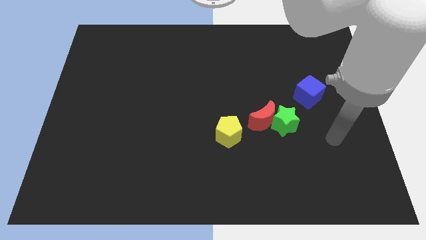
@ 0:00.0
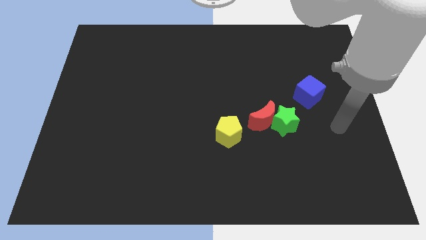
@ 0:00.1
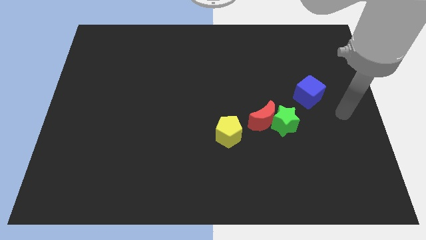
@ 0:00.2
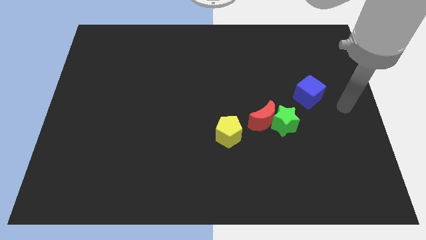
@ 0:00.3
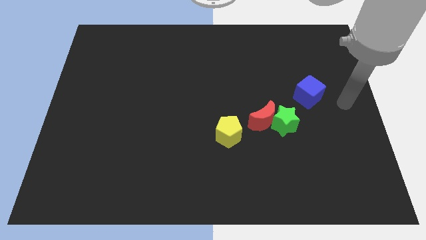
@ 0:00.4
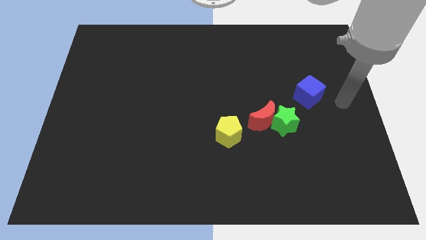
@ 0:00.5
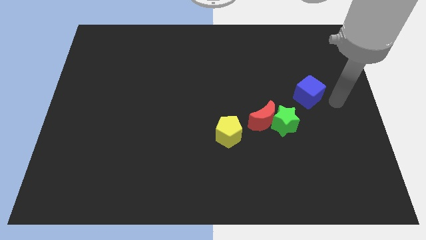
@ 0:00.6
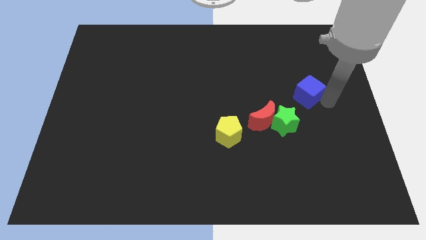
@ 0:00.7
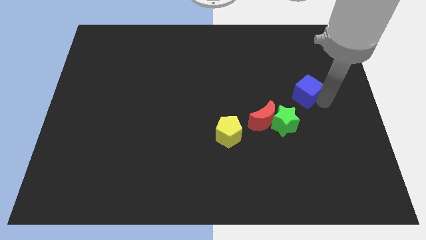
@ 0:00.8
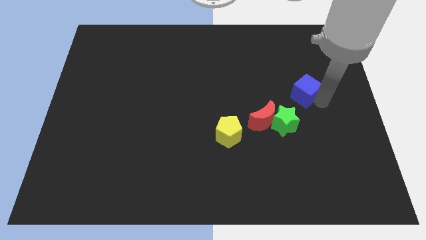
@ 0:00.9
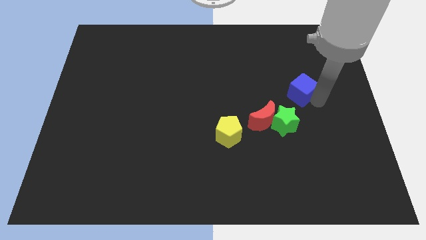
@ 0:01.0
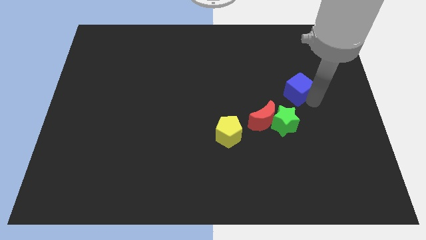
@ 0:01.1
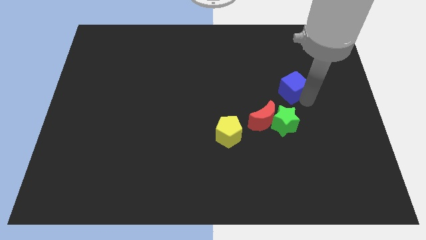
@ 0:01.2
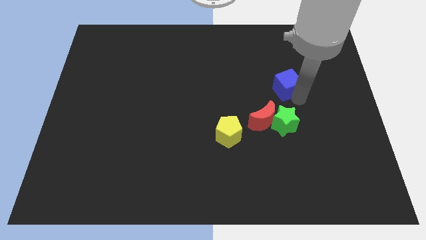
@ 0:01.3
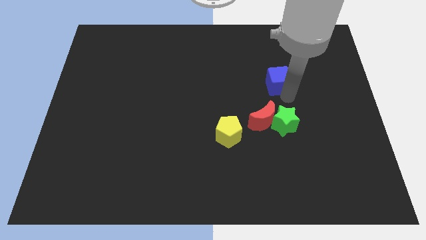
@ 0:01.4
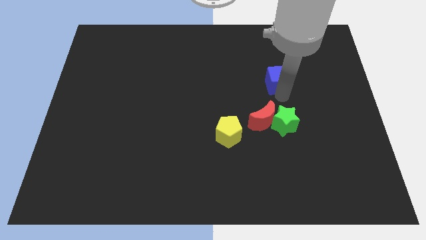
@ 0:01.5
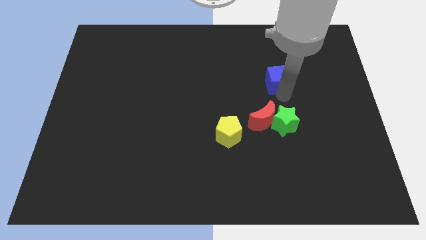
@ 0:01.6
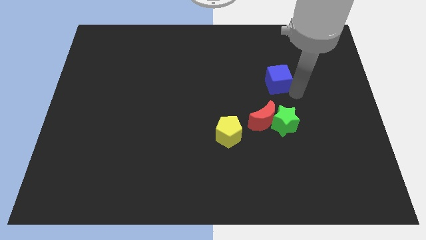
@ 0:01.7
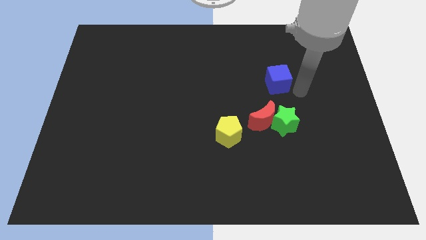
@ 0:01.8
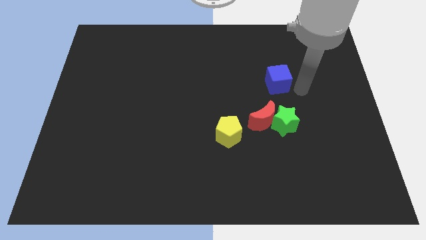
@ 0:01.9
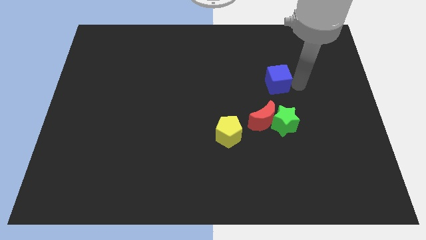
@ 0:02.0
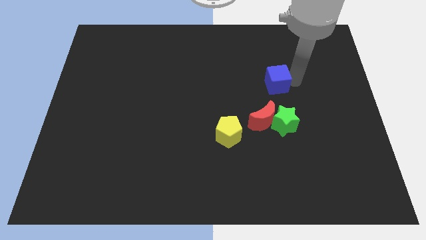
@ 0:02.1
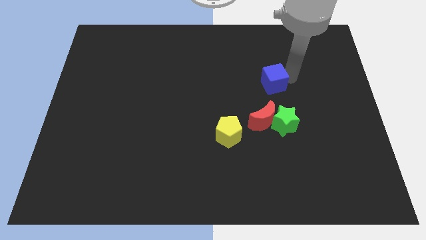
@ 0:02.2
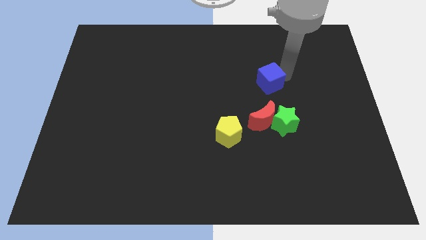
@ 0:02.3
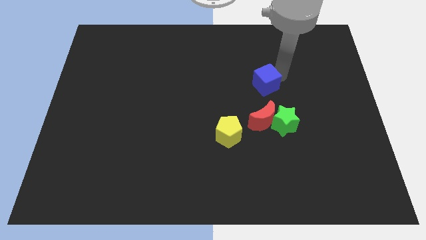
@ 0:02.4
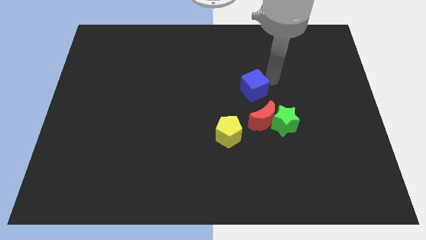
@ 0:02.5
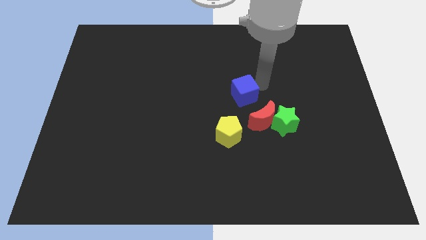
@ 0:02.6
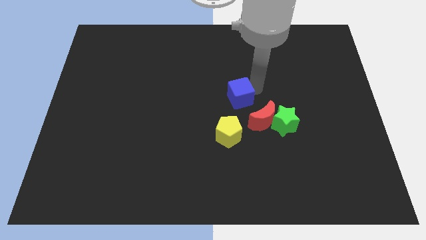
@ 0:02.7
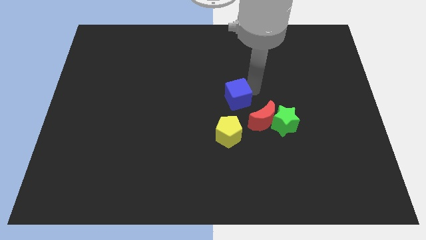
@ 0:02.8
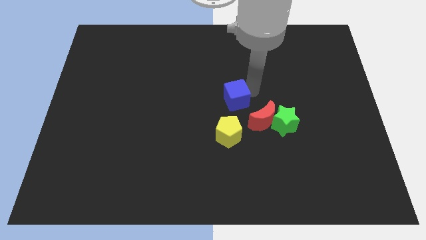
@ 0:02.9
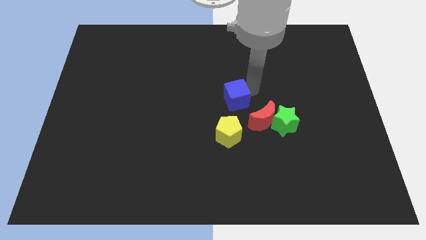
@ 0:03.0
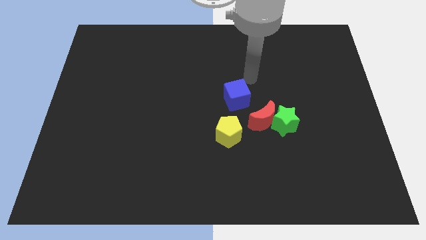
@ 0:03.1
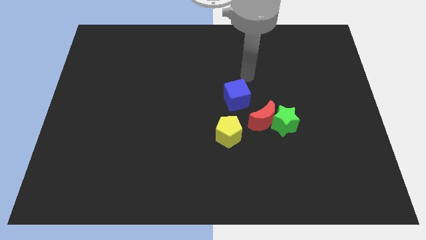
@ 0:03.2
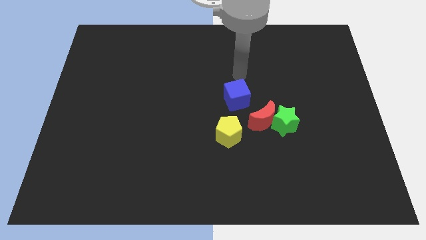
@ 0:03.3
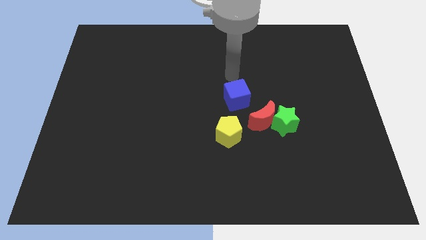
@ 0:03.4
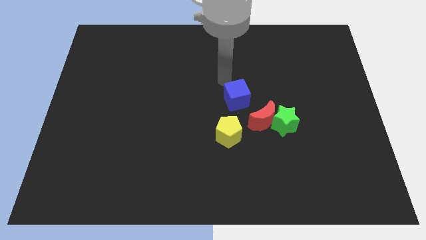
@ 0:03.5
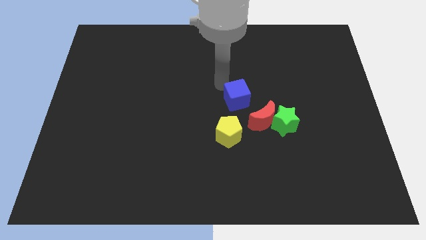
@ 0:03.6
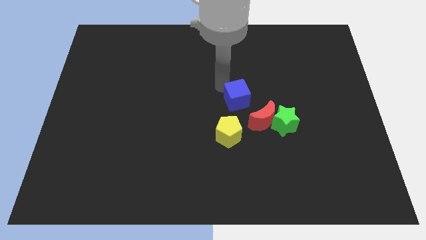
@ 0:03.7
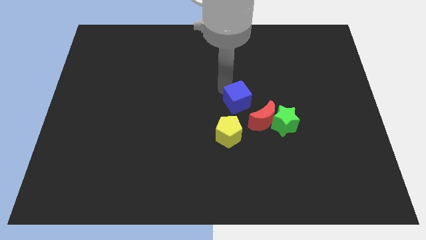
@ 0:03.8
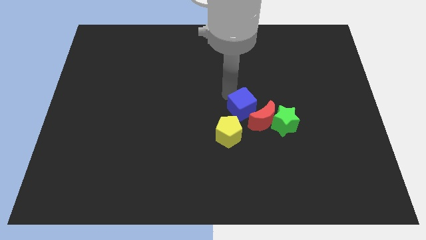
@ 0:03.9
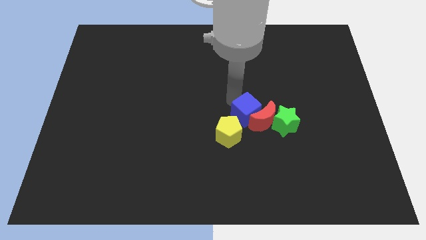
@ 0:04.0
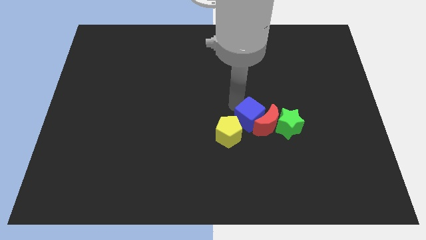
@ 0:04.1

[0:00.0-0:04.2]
push the cube next to the moon

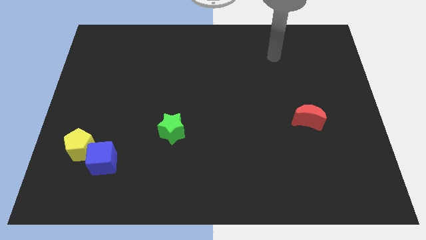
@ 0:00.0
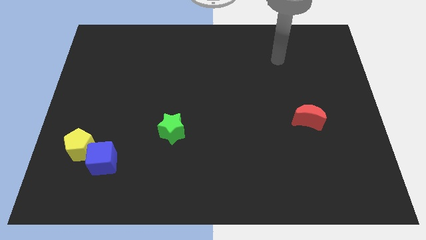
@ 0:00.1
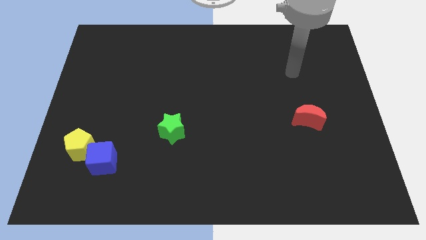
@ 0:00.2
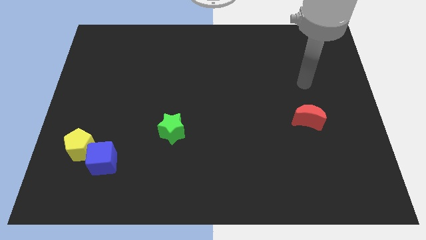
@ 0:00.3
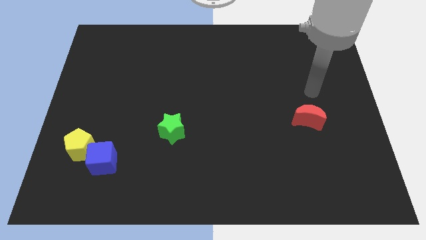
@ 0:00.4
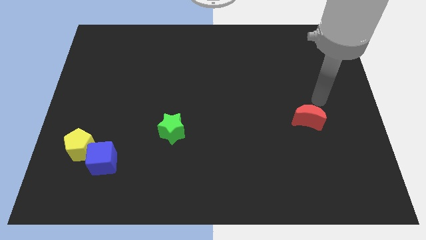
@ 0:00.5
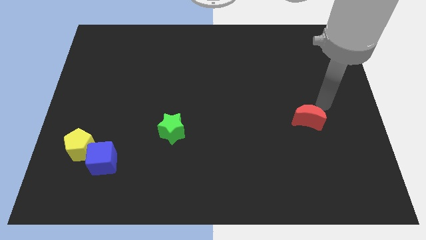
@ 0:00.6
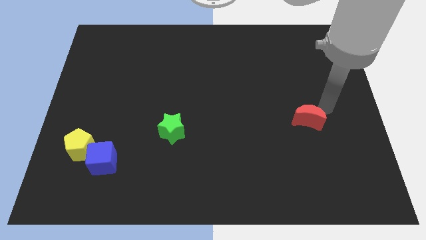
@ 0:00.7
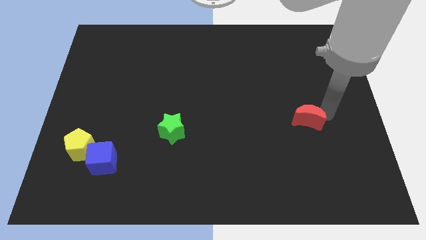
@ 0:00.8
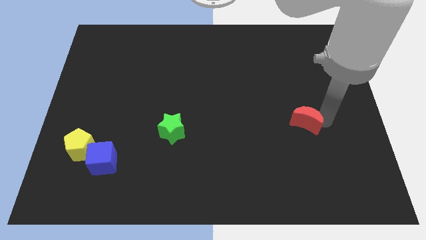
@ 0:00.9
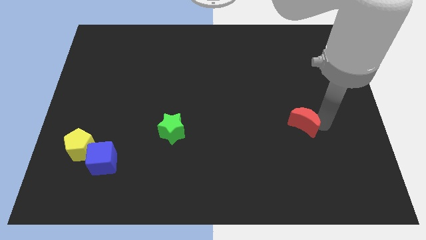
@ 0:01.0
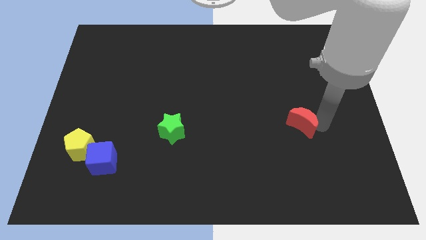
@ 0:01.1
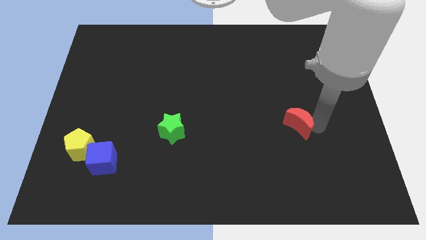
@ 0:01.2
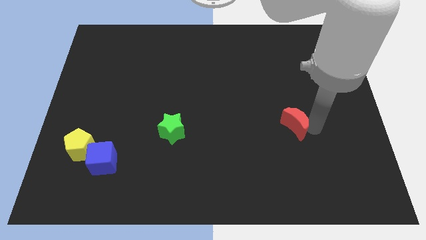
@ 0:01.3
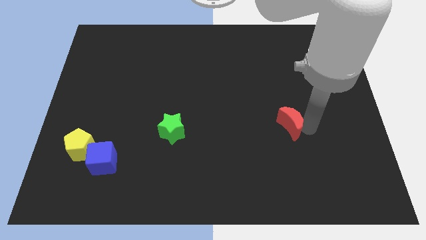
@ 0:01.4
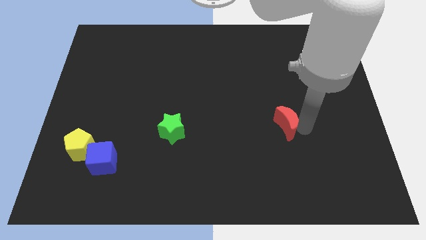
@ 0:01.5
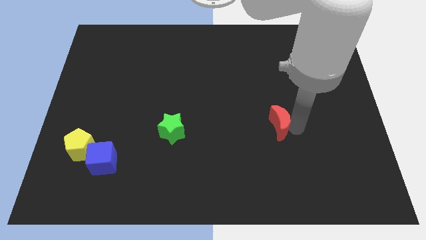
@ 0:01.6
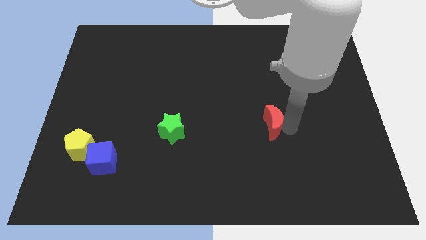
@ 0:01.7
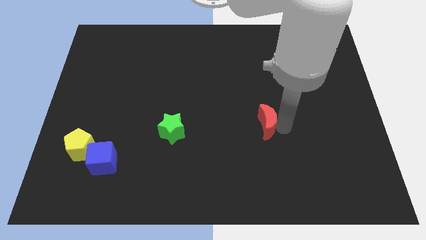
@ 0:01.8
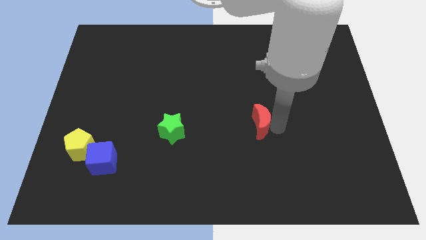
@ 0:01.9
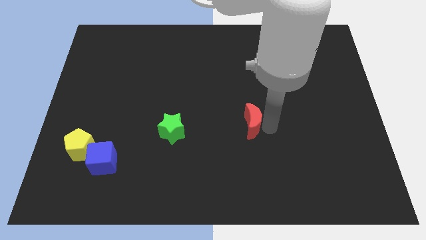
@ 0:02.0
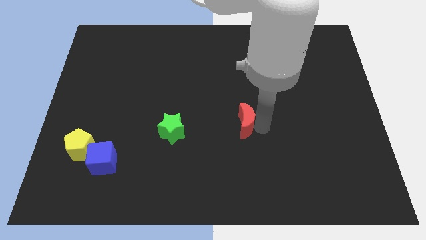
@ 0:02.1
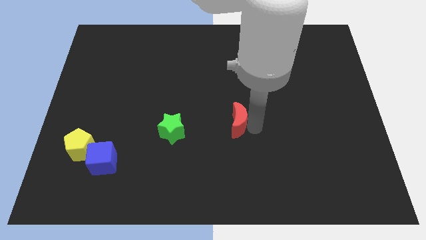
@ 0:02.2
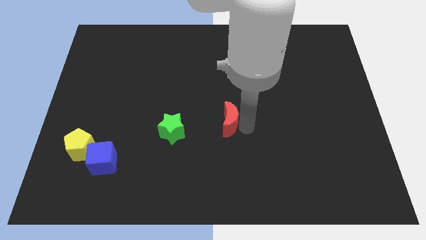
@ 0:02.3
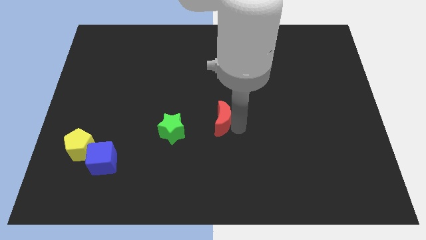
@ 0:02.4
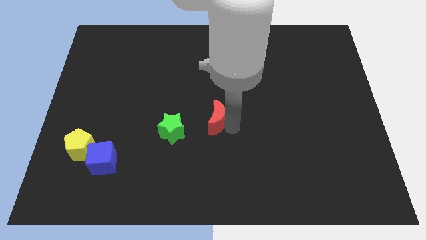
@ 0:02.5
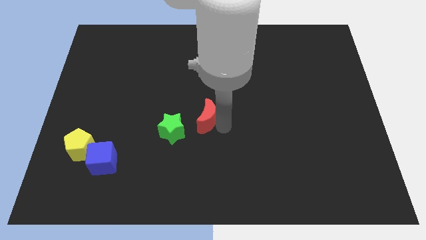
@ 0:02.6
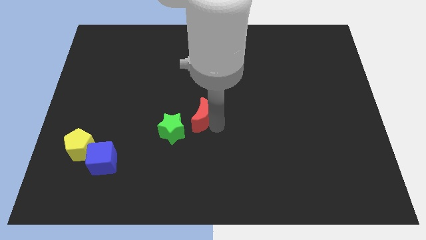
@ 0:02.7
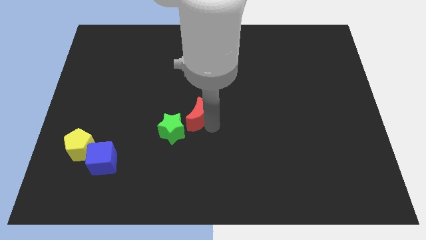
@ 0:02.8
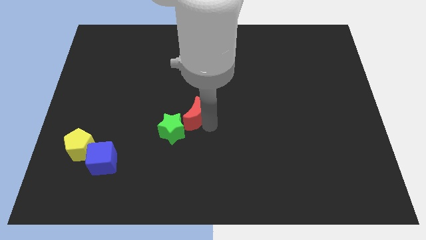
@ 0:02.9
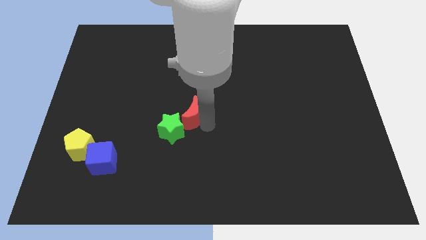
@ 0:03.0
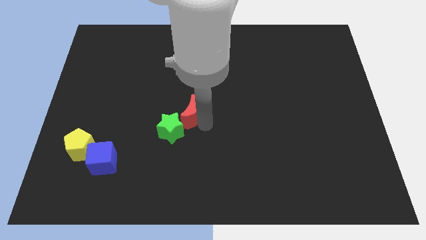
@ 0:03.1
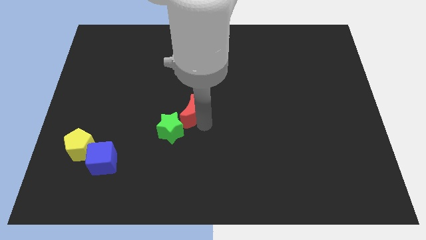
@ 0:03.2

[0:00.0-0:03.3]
push the moon next to the star

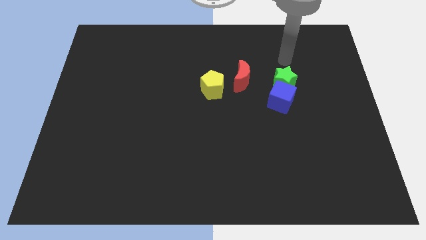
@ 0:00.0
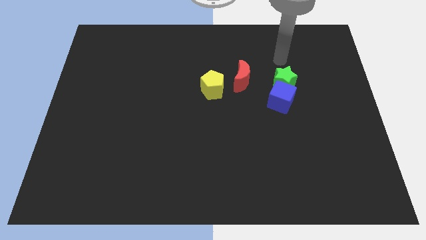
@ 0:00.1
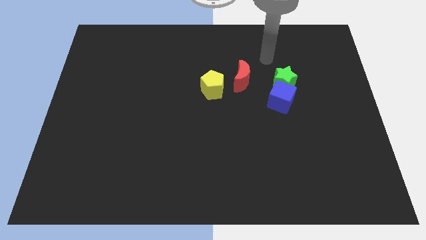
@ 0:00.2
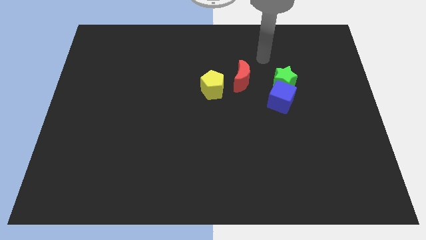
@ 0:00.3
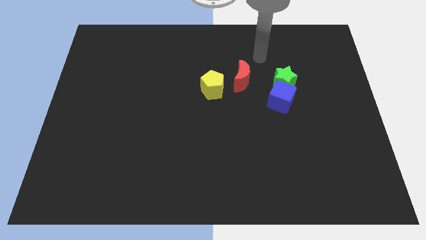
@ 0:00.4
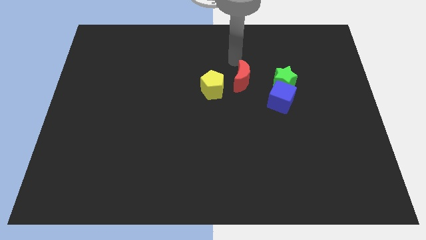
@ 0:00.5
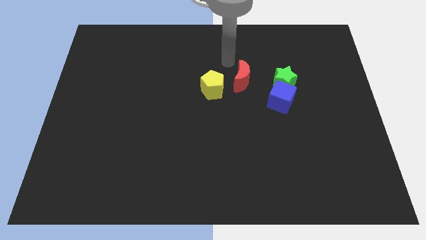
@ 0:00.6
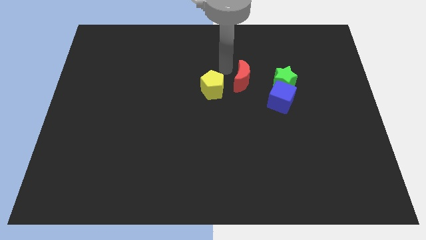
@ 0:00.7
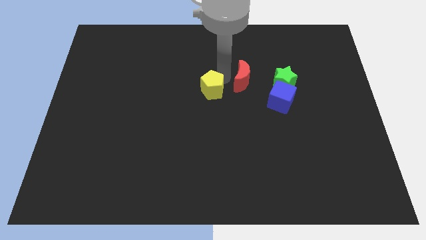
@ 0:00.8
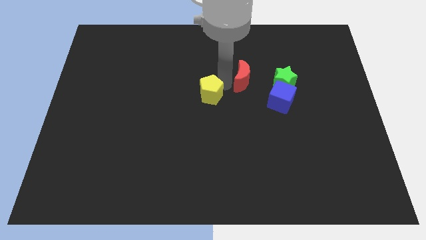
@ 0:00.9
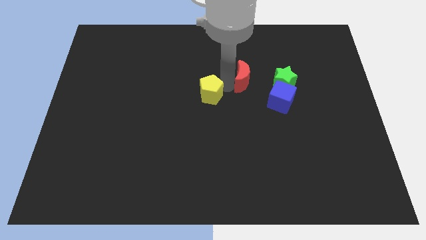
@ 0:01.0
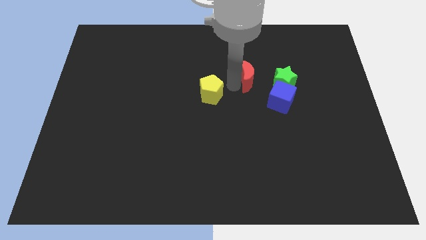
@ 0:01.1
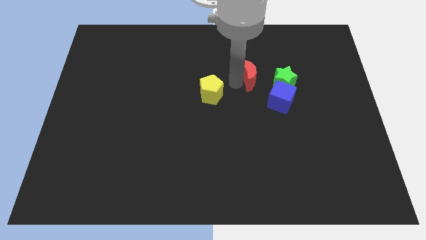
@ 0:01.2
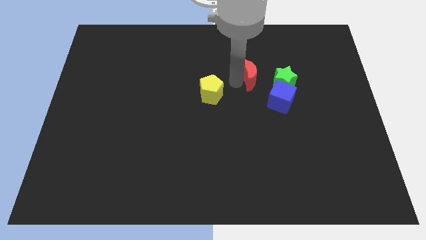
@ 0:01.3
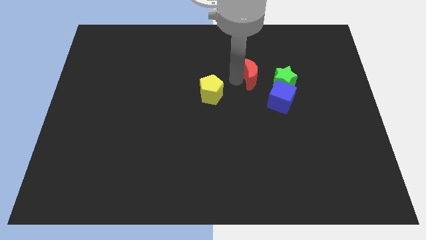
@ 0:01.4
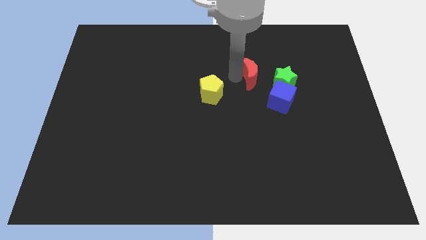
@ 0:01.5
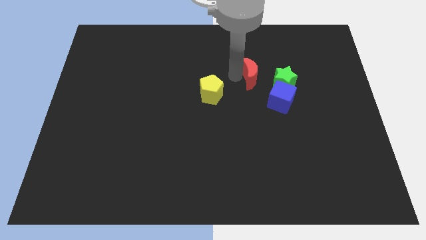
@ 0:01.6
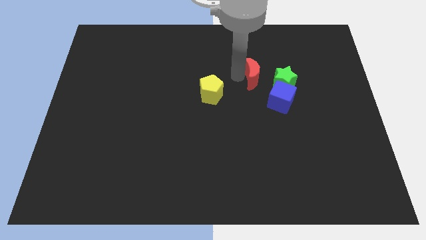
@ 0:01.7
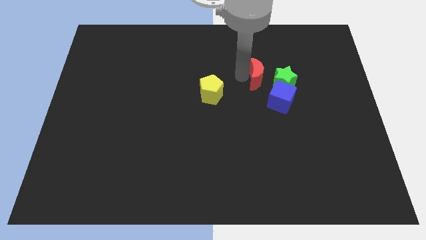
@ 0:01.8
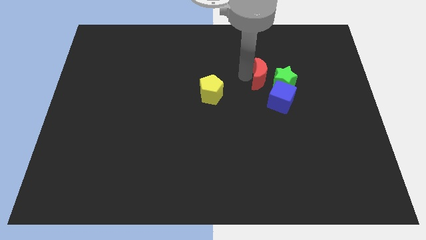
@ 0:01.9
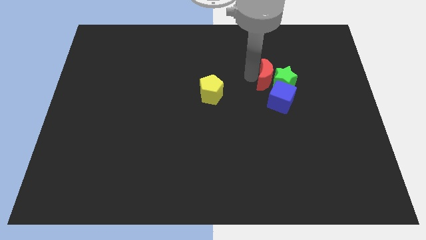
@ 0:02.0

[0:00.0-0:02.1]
put the moon to the green star
